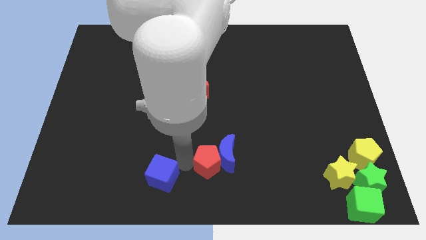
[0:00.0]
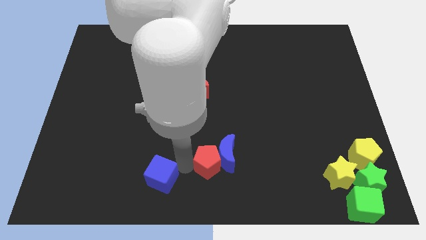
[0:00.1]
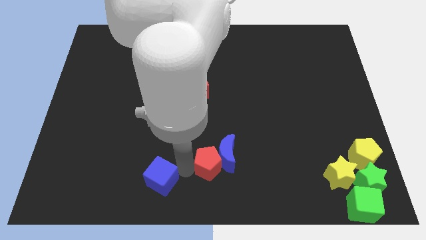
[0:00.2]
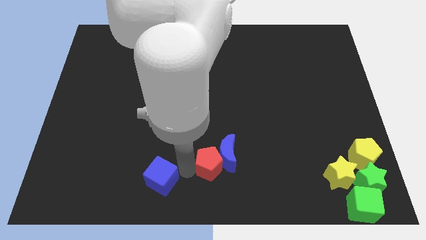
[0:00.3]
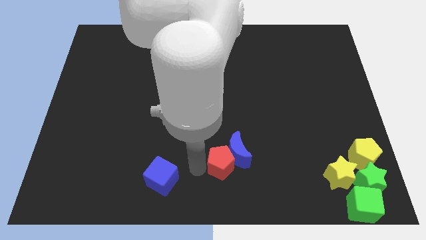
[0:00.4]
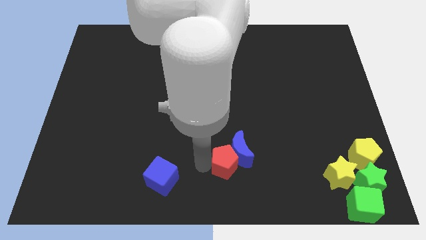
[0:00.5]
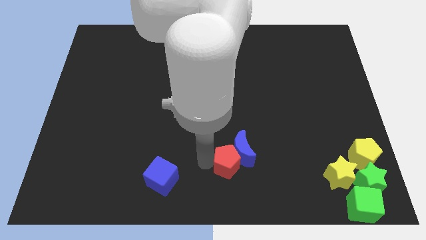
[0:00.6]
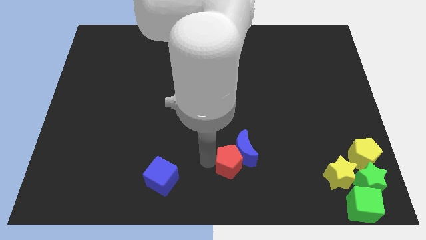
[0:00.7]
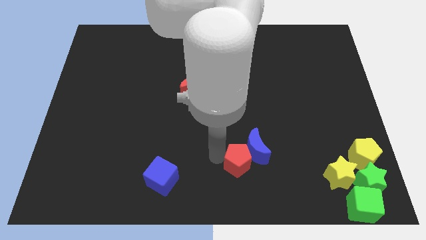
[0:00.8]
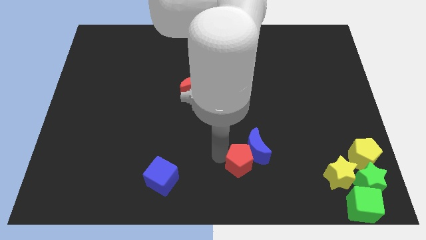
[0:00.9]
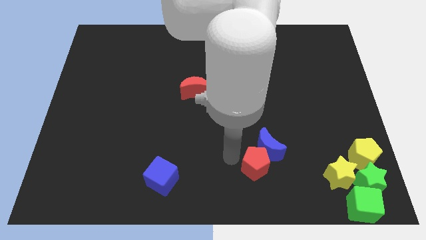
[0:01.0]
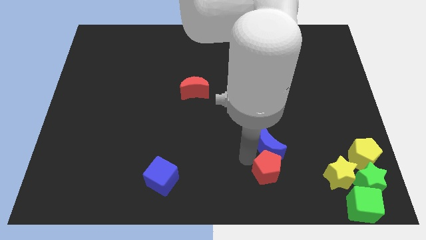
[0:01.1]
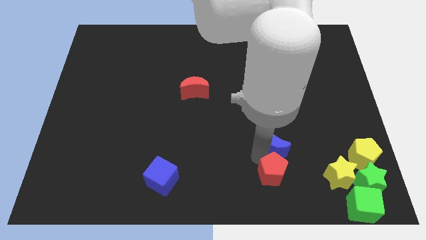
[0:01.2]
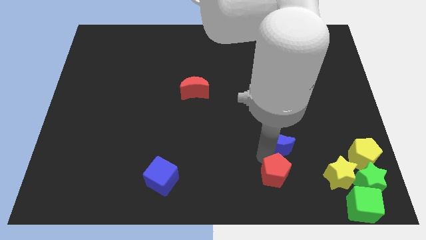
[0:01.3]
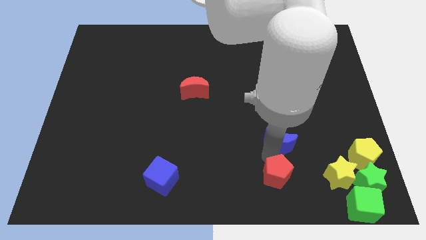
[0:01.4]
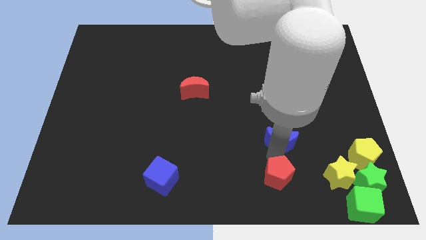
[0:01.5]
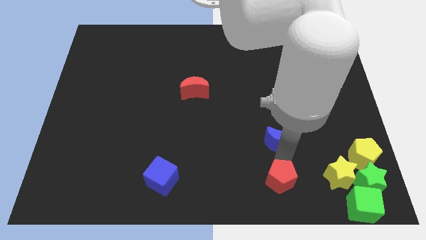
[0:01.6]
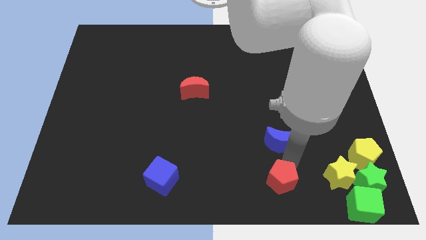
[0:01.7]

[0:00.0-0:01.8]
push red pentagon towards the group of objects

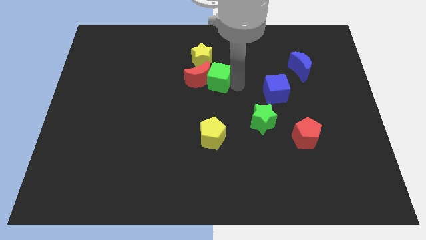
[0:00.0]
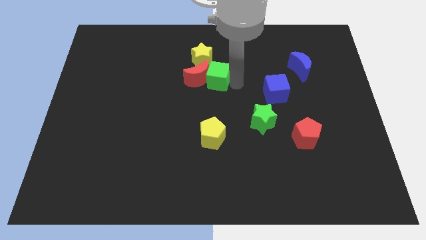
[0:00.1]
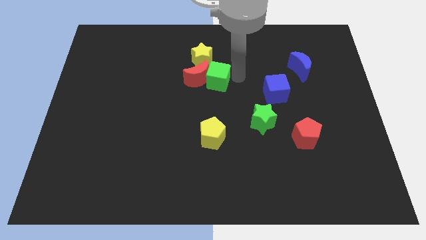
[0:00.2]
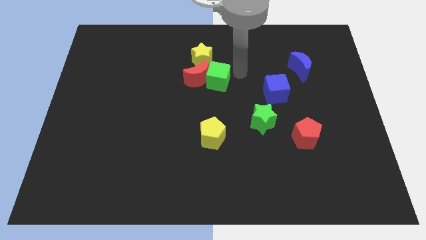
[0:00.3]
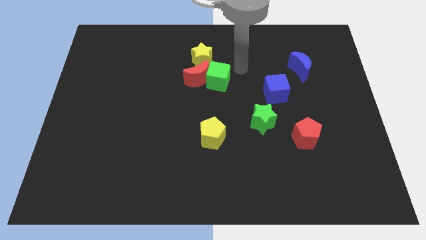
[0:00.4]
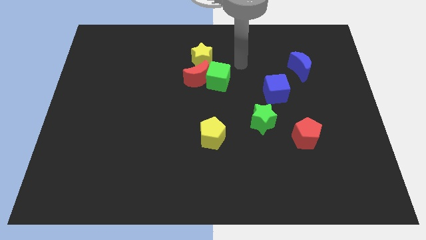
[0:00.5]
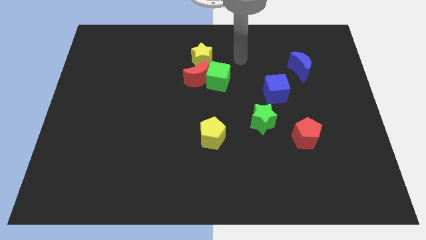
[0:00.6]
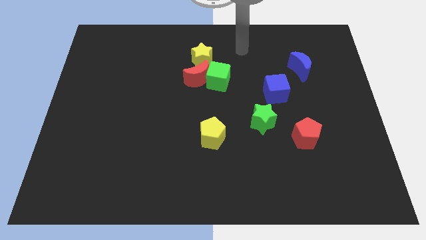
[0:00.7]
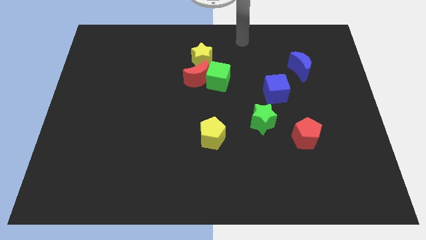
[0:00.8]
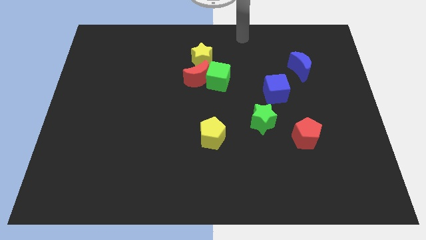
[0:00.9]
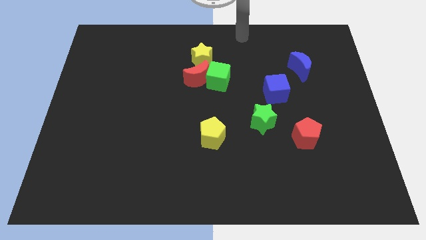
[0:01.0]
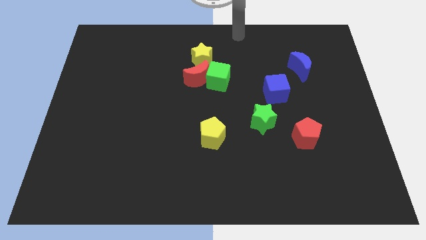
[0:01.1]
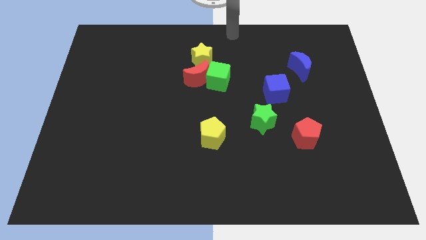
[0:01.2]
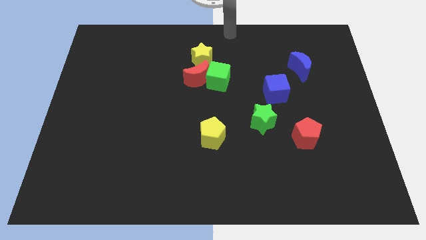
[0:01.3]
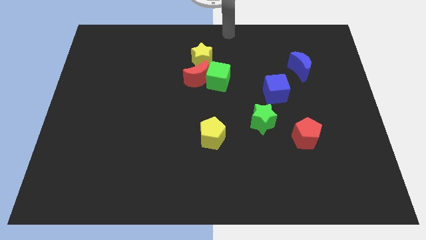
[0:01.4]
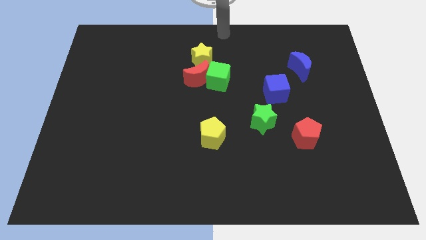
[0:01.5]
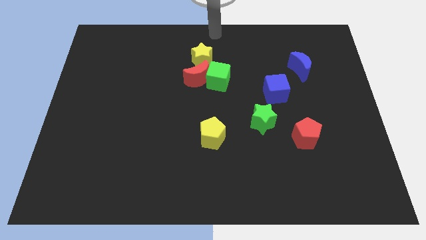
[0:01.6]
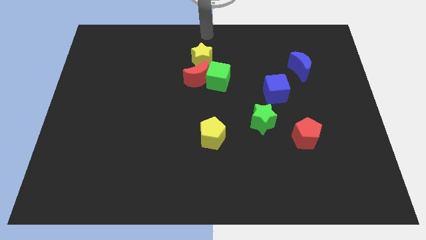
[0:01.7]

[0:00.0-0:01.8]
move away from the green cube

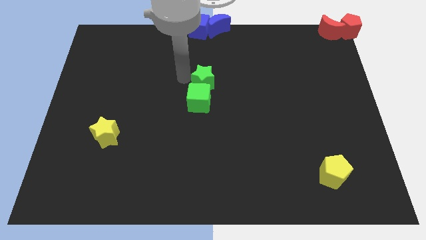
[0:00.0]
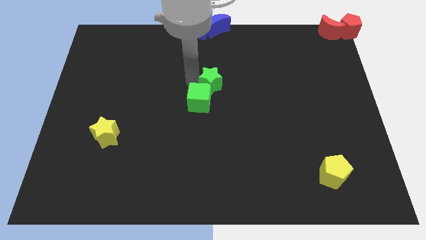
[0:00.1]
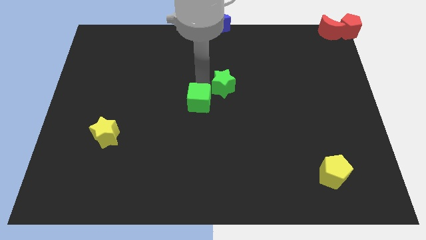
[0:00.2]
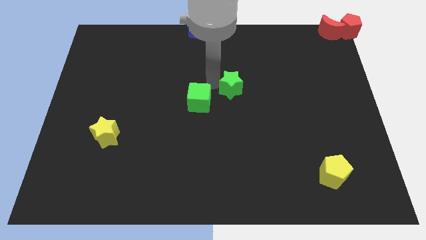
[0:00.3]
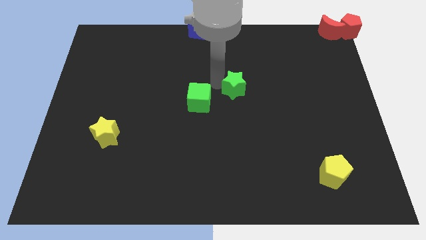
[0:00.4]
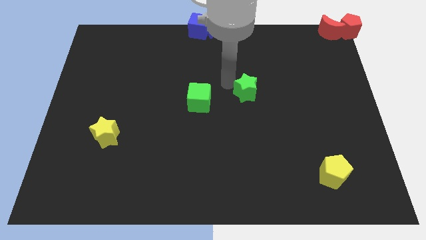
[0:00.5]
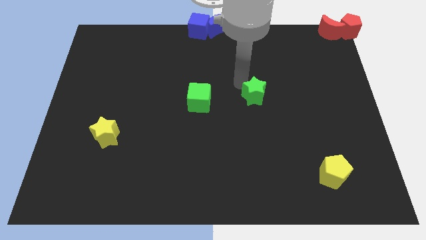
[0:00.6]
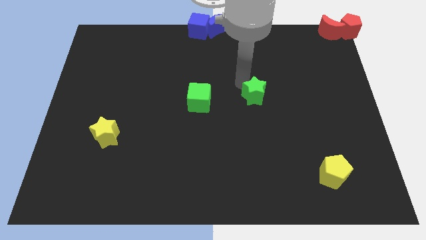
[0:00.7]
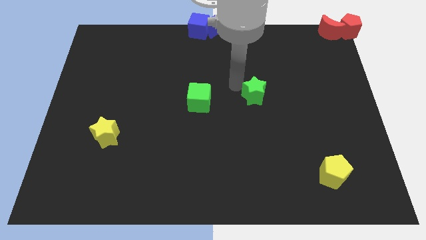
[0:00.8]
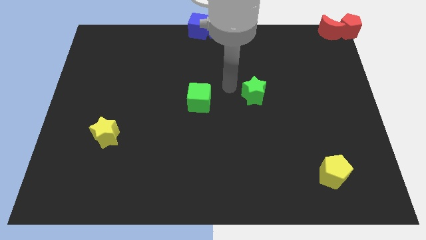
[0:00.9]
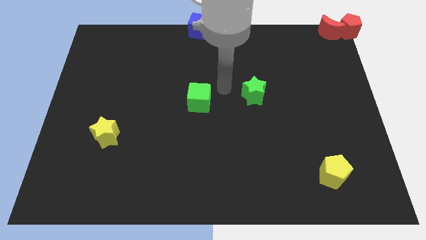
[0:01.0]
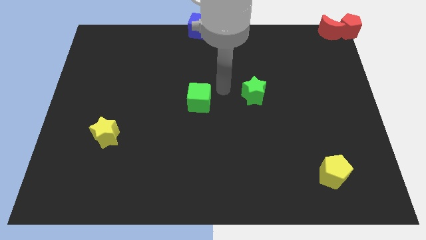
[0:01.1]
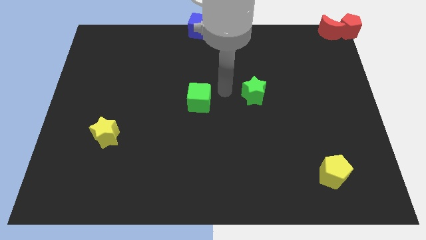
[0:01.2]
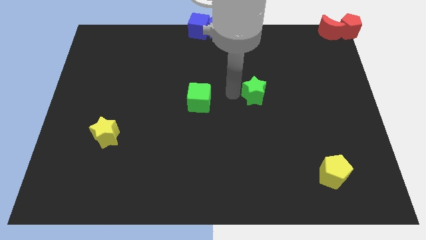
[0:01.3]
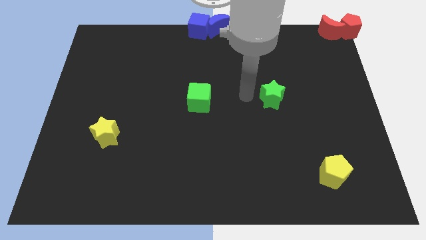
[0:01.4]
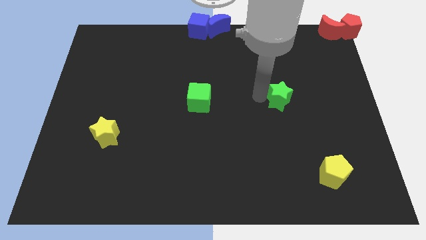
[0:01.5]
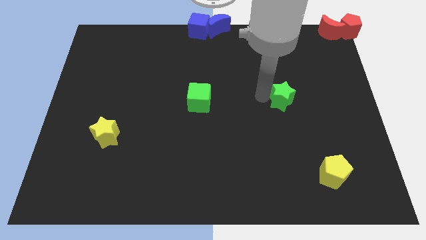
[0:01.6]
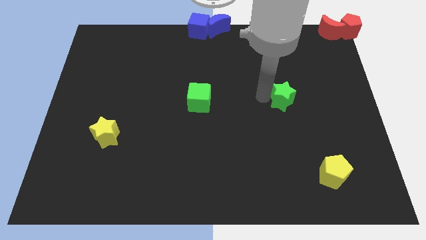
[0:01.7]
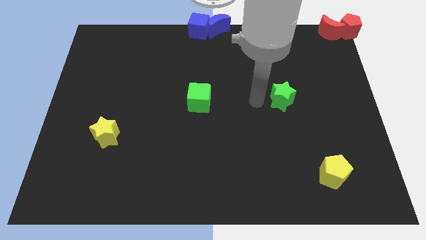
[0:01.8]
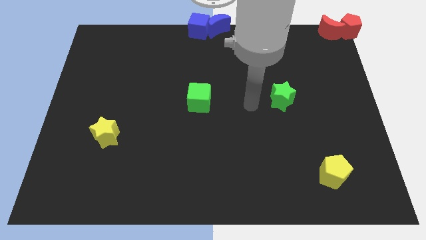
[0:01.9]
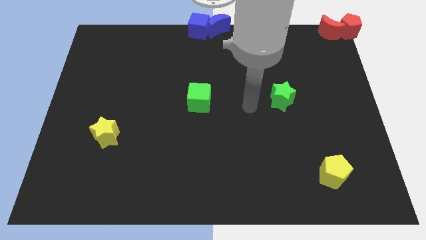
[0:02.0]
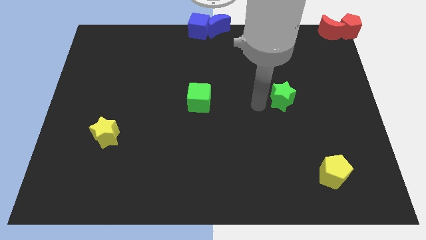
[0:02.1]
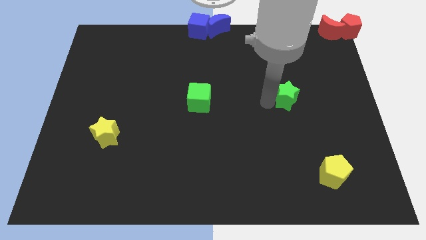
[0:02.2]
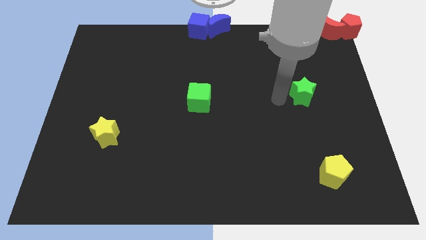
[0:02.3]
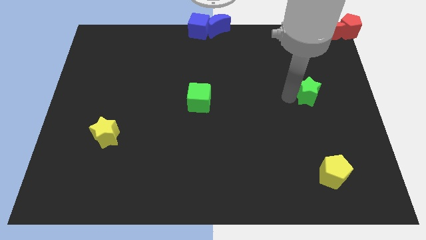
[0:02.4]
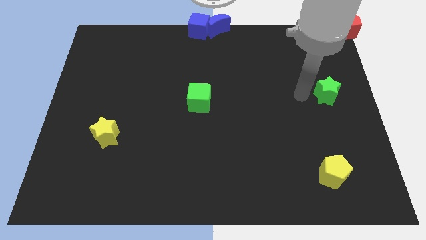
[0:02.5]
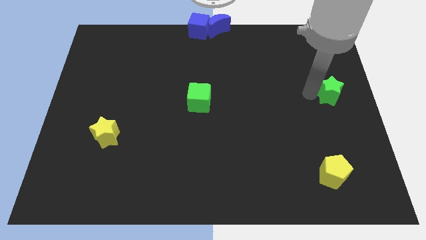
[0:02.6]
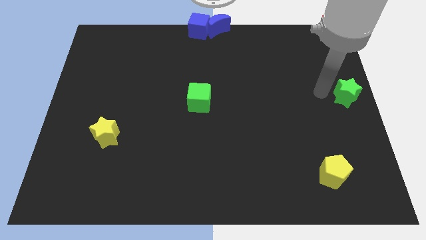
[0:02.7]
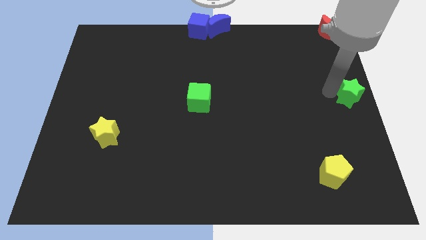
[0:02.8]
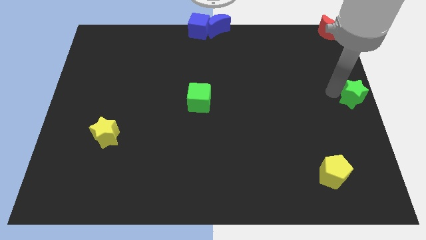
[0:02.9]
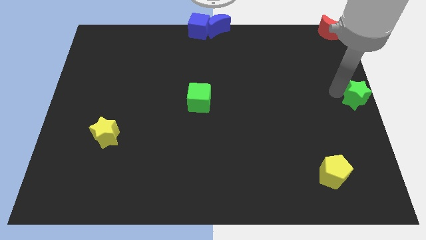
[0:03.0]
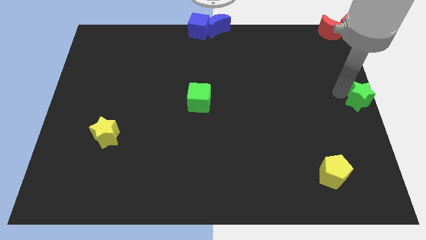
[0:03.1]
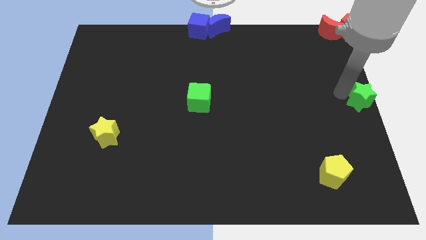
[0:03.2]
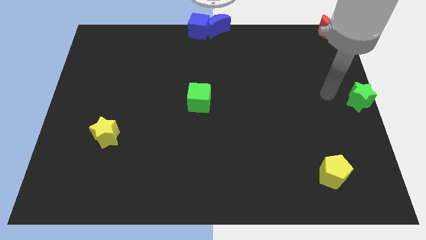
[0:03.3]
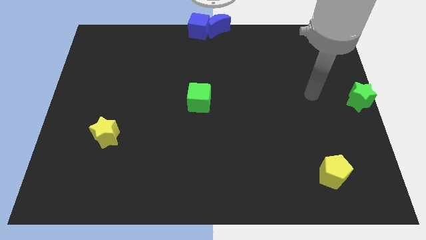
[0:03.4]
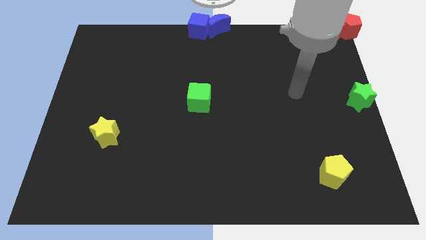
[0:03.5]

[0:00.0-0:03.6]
place the green star parallel to green cube

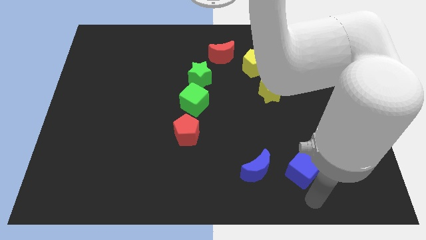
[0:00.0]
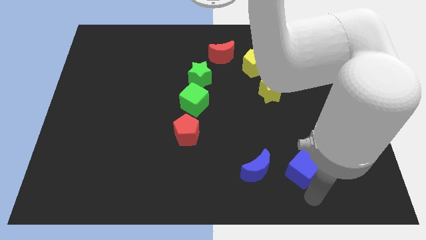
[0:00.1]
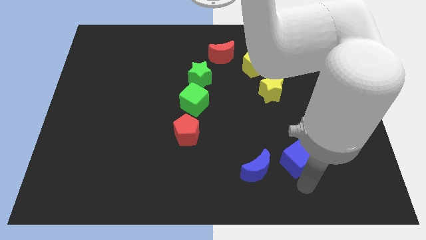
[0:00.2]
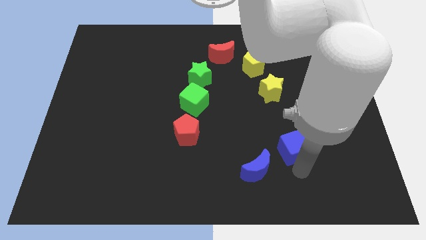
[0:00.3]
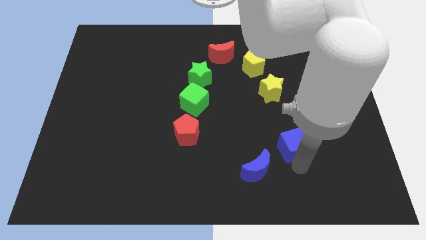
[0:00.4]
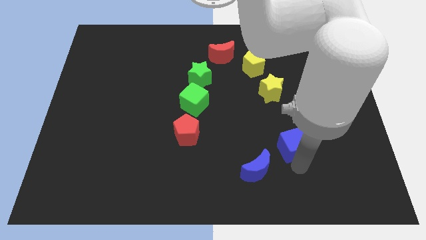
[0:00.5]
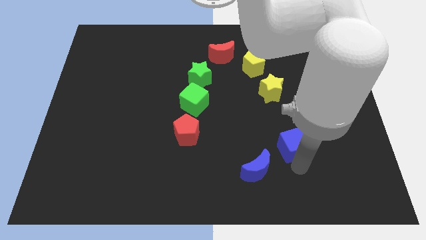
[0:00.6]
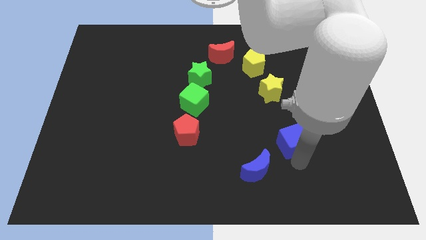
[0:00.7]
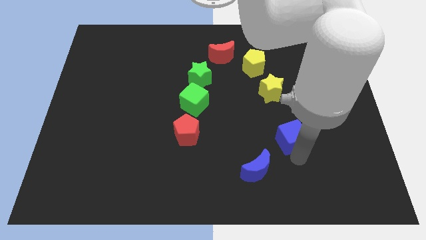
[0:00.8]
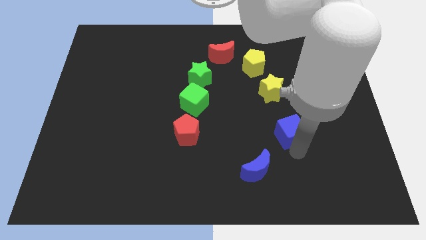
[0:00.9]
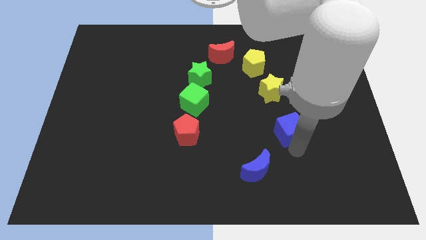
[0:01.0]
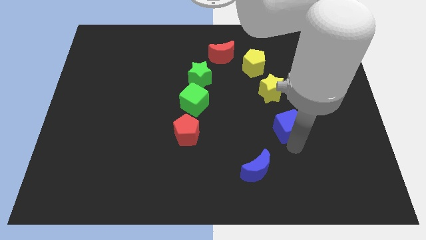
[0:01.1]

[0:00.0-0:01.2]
drag the blue cube to the top right side of the blue crescent

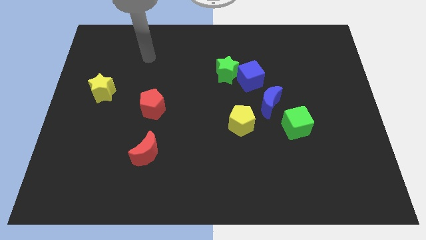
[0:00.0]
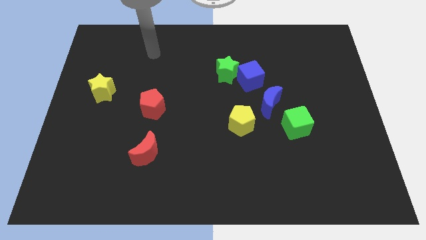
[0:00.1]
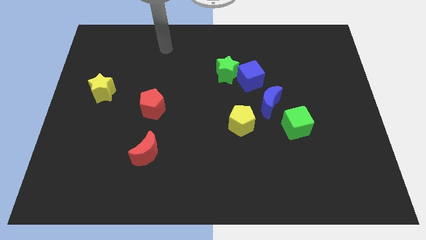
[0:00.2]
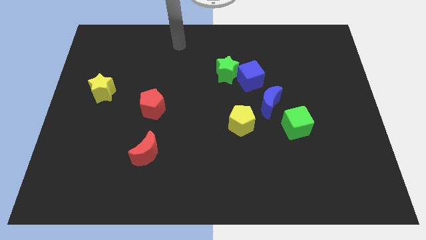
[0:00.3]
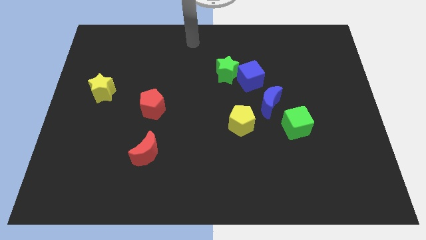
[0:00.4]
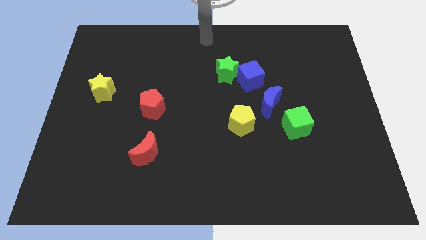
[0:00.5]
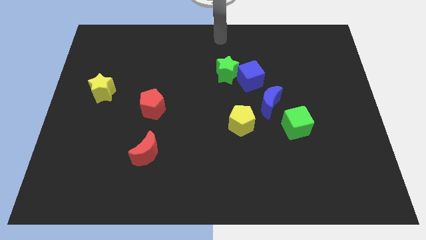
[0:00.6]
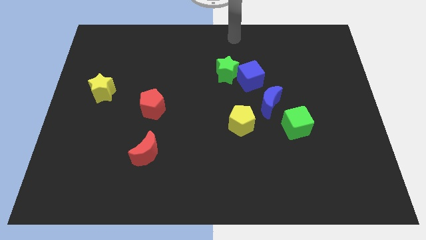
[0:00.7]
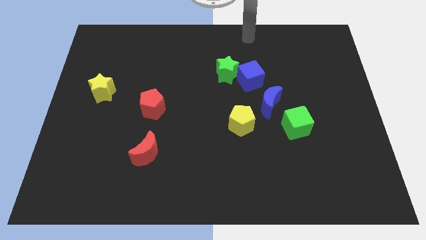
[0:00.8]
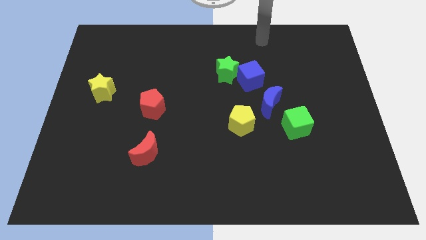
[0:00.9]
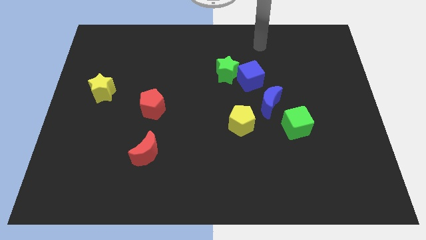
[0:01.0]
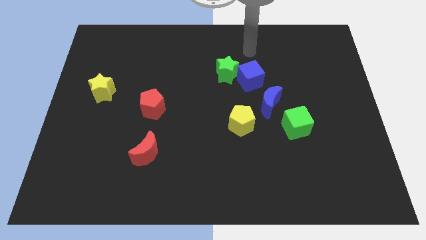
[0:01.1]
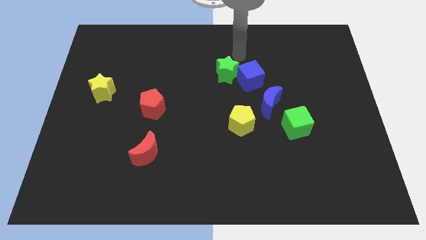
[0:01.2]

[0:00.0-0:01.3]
point your arm at the top of the blue cube
